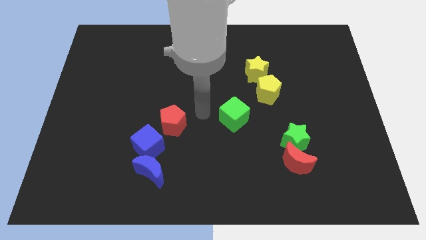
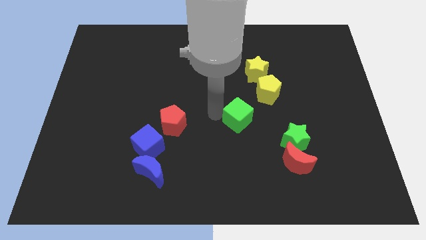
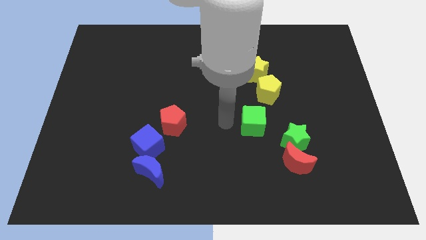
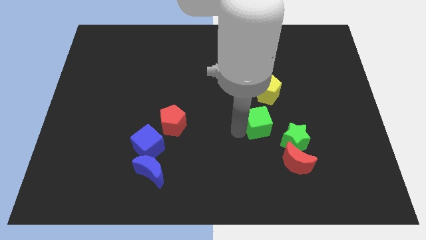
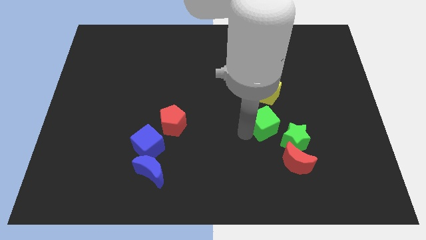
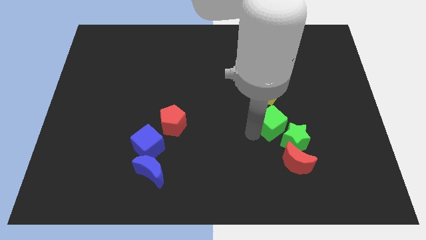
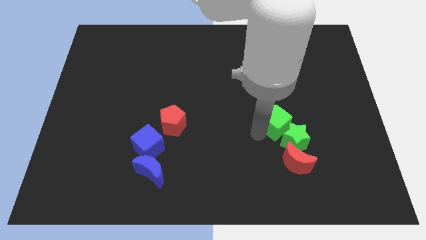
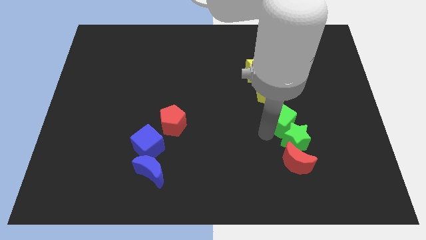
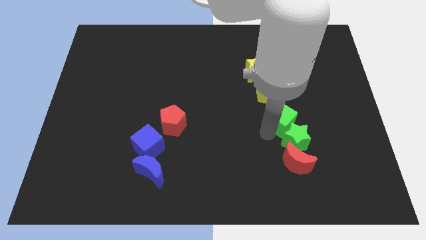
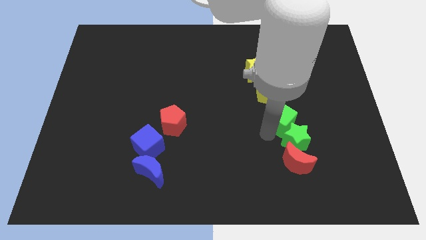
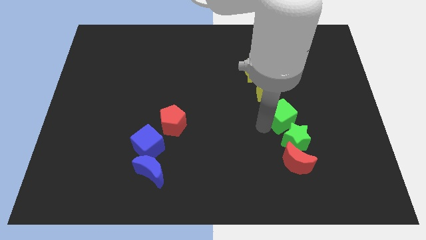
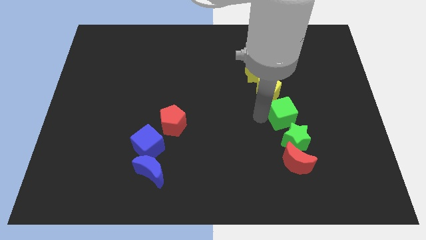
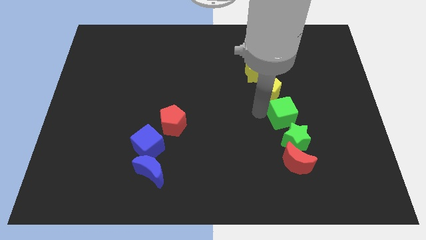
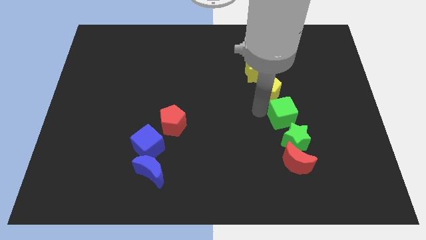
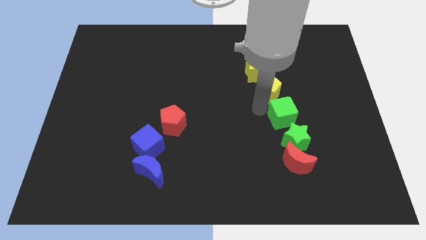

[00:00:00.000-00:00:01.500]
place the green cube in between yellow pentagon and green star

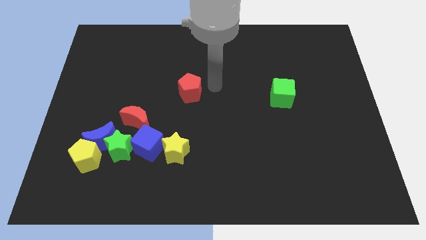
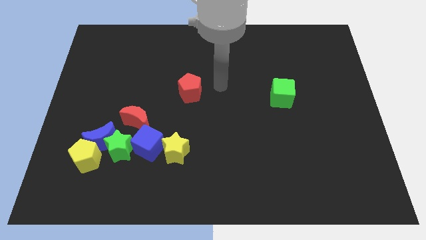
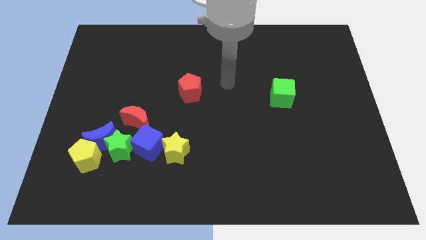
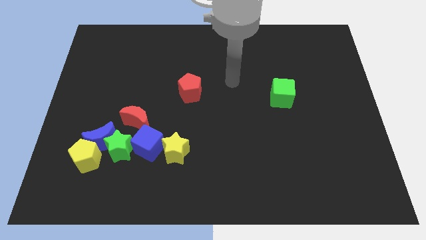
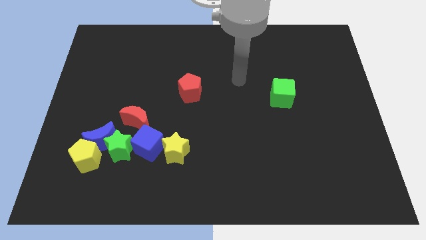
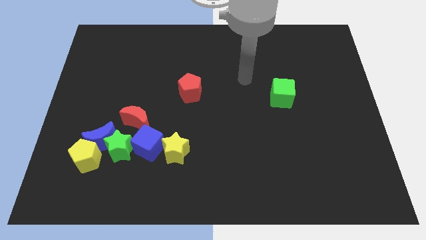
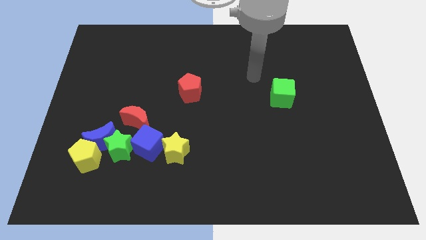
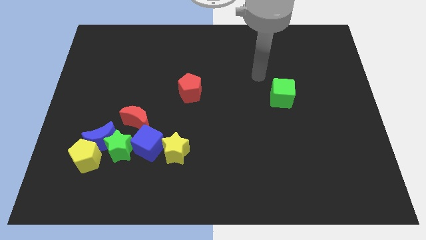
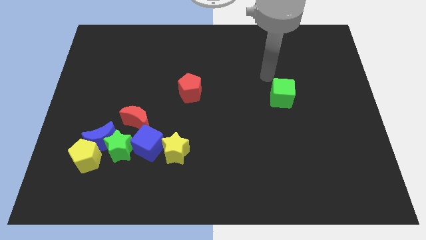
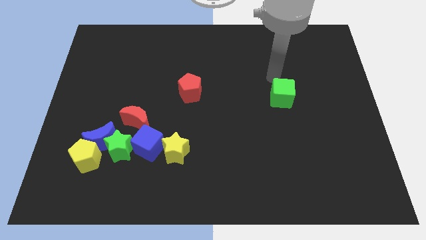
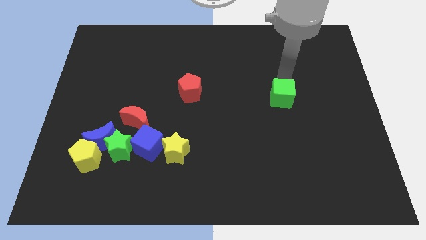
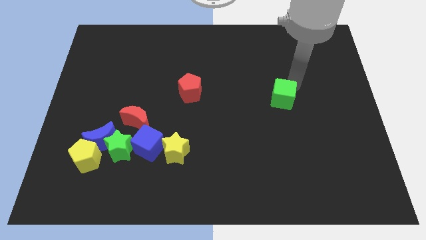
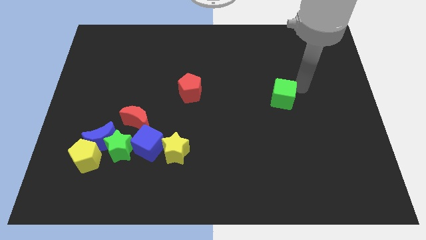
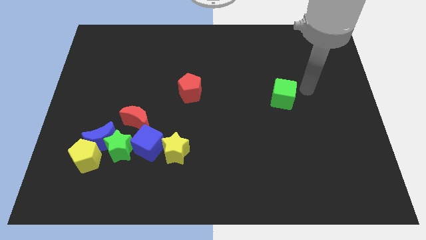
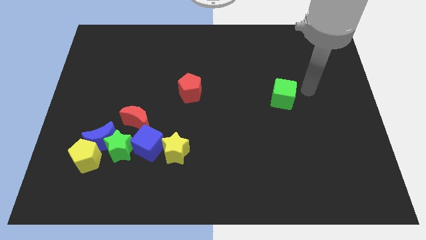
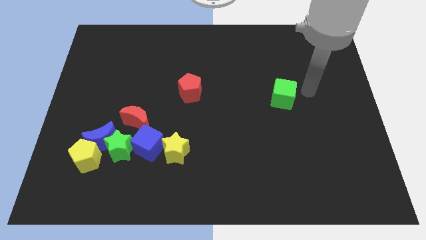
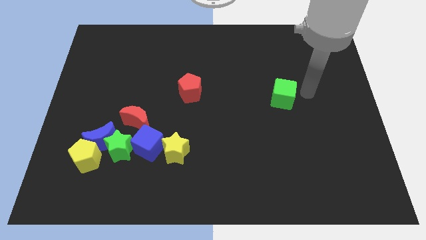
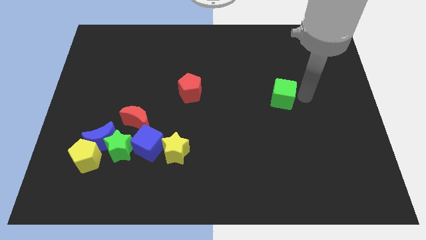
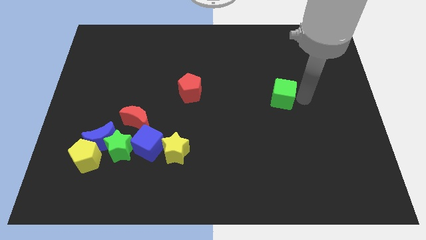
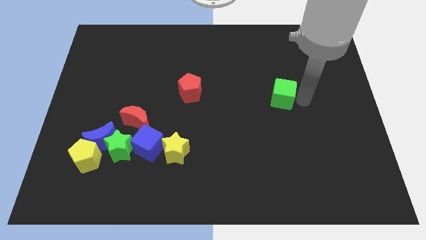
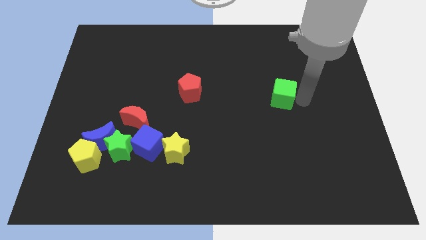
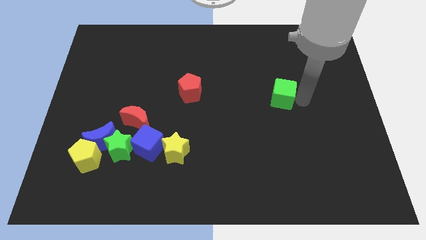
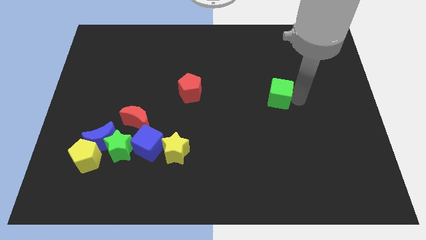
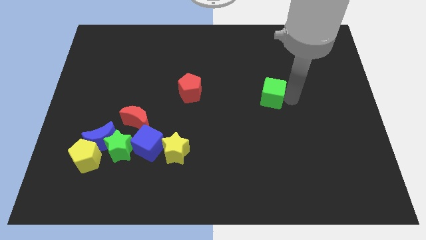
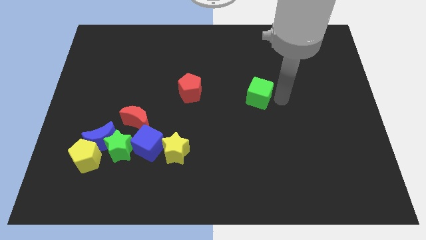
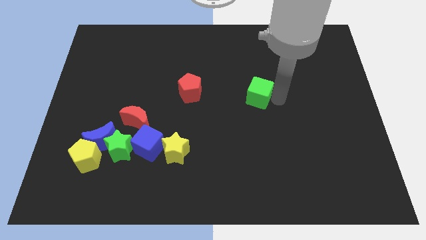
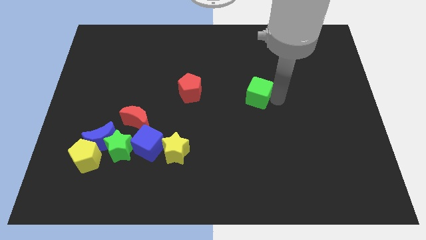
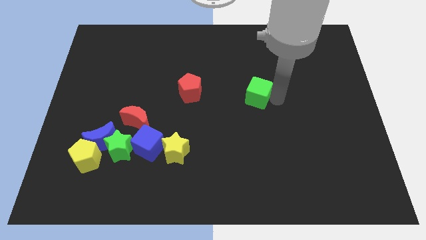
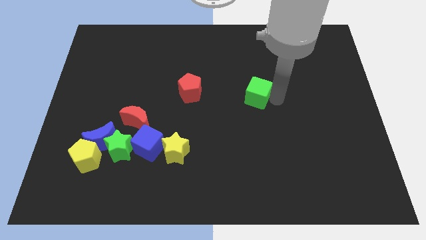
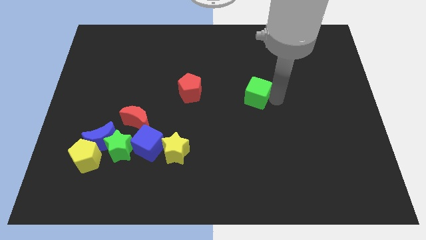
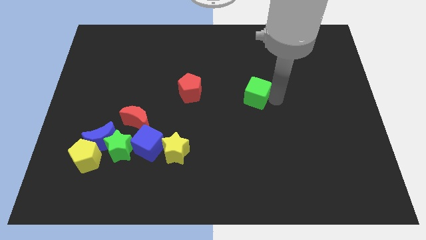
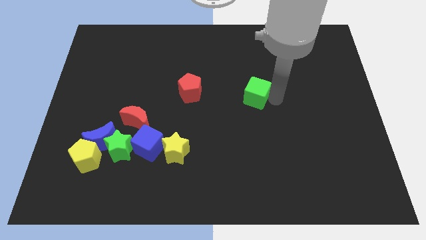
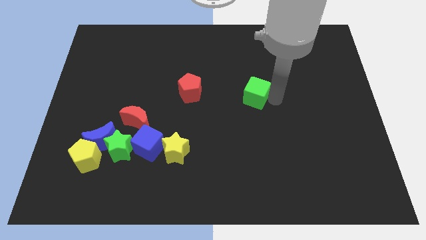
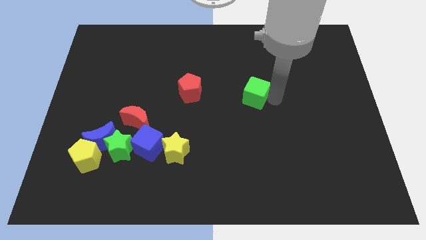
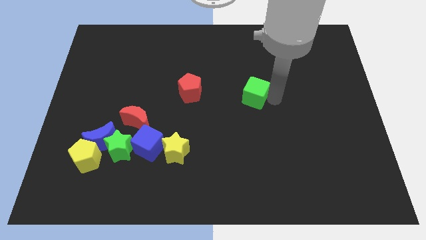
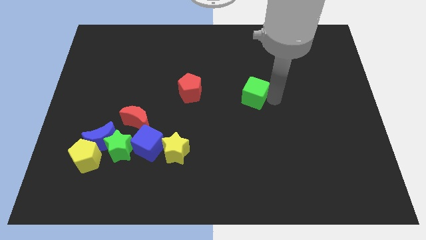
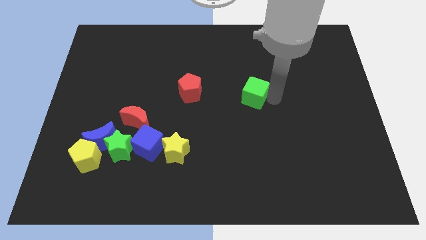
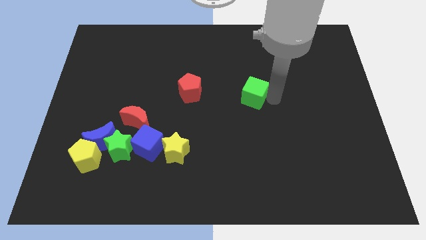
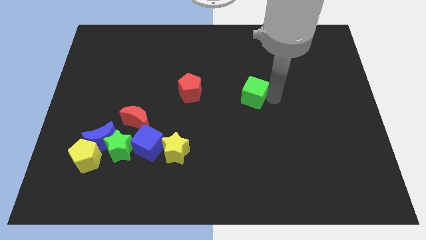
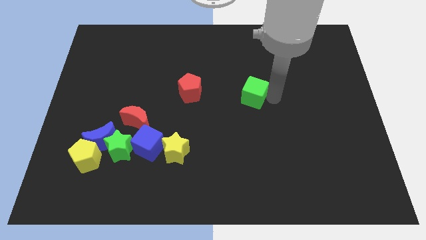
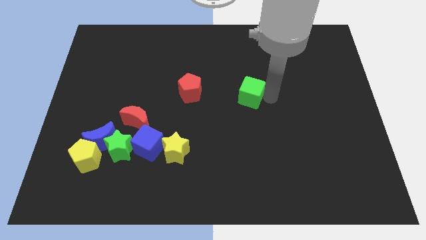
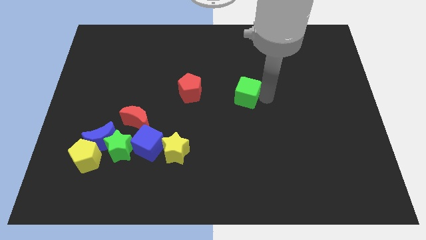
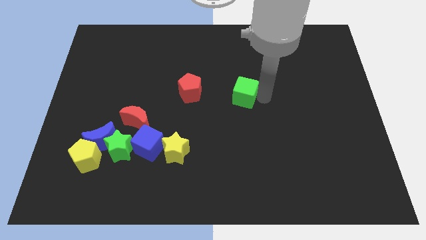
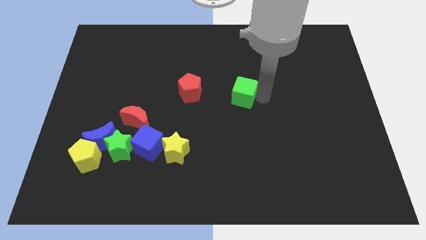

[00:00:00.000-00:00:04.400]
slide the green cube to the right side of the red pentagon

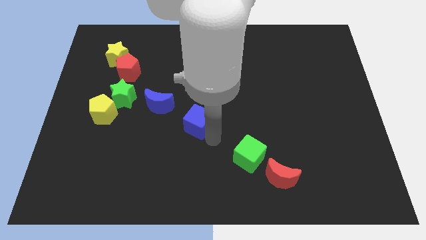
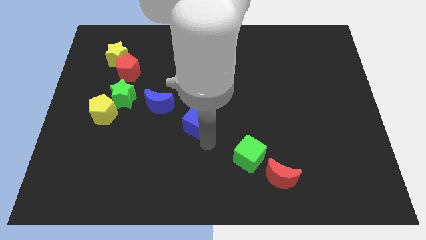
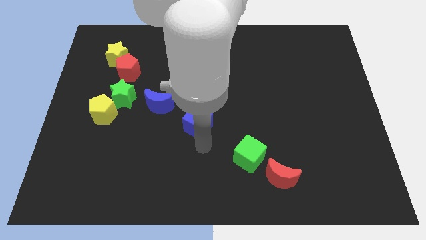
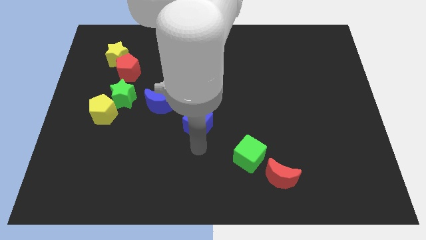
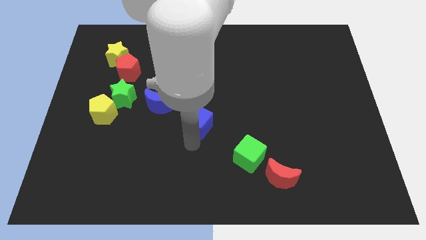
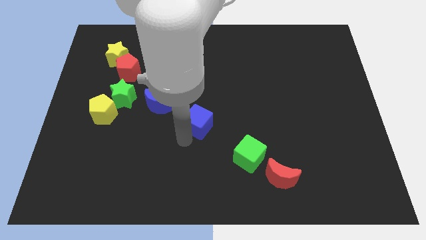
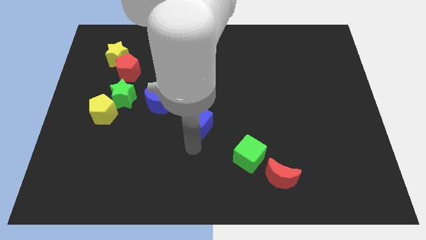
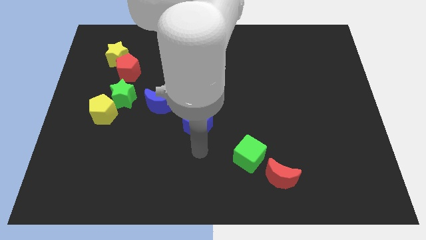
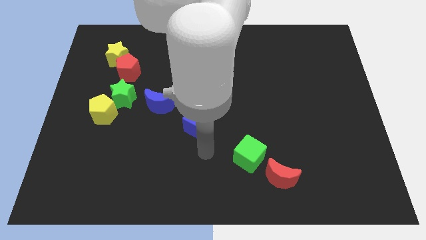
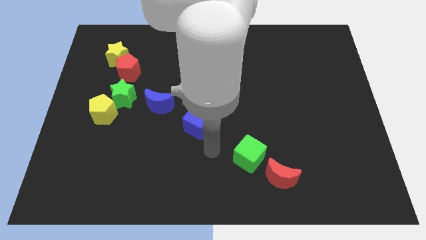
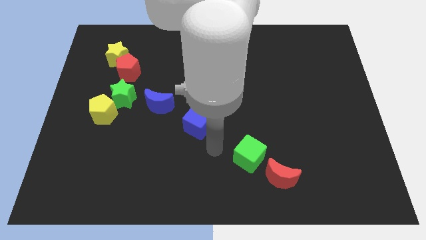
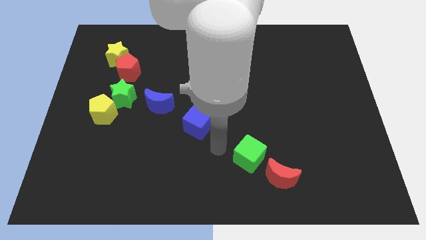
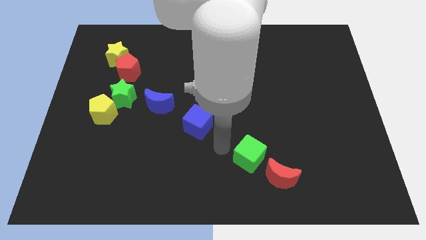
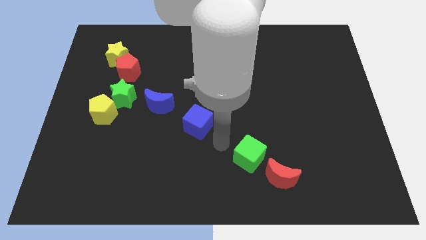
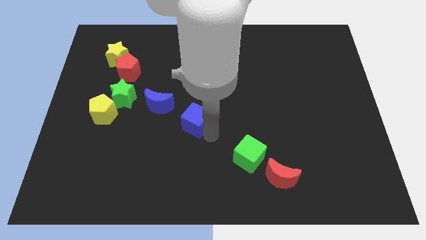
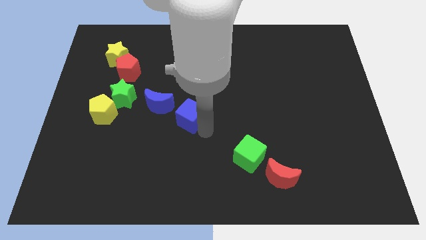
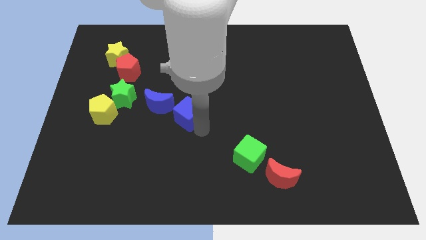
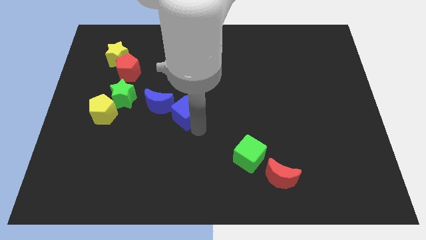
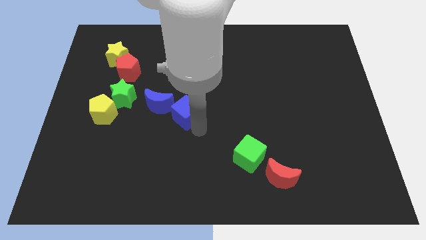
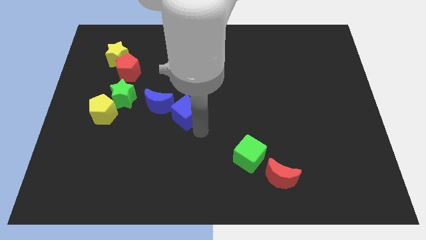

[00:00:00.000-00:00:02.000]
move the blue cube close to the blue crescent

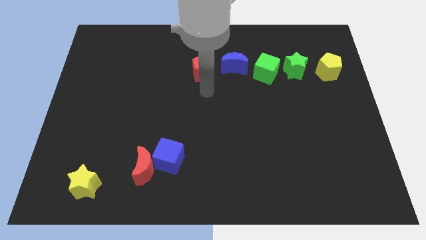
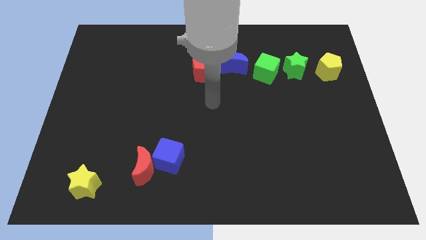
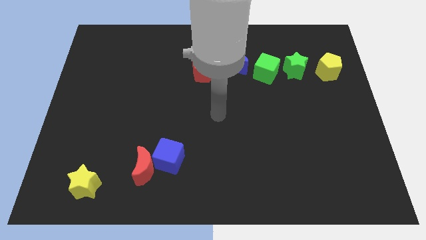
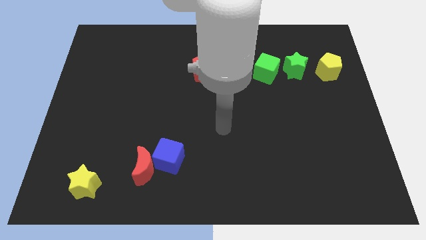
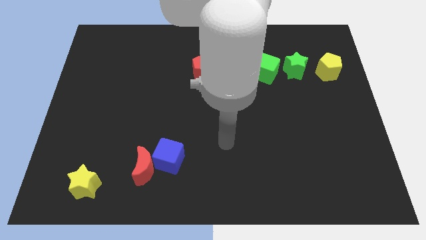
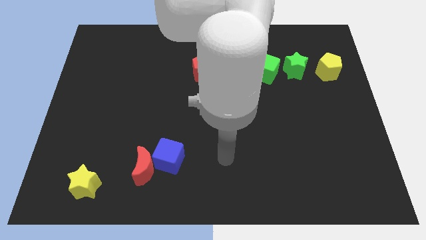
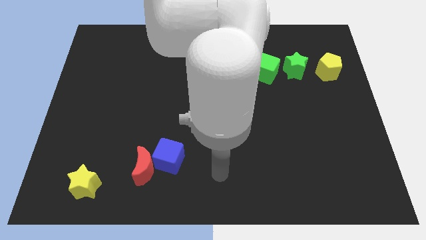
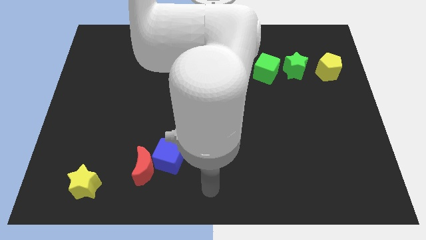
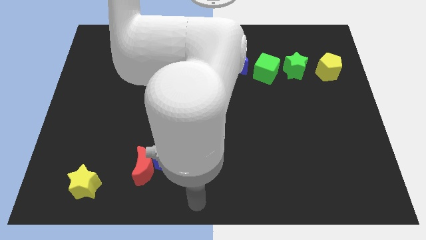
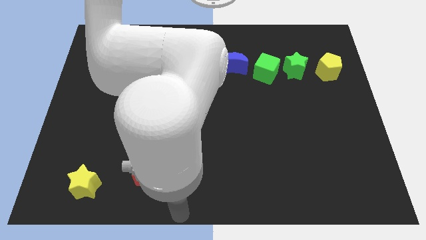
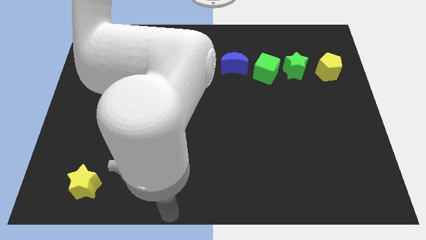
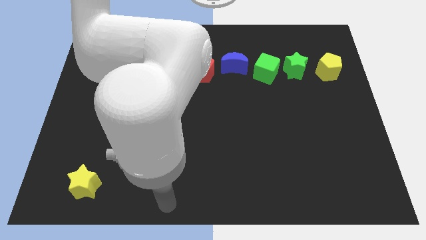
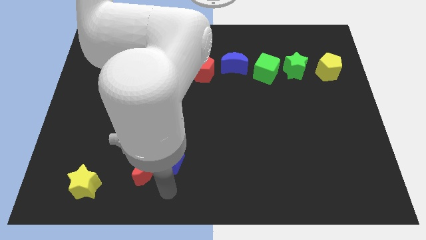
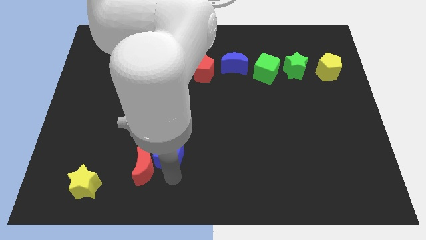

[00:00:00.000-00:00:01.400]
move your arm below the blue cube
